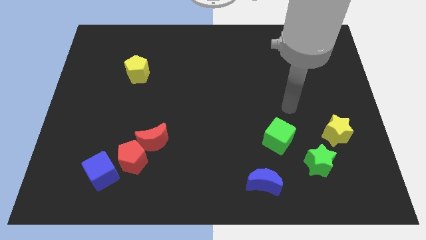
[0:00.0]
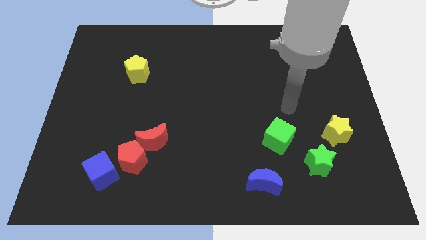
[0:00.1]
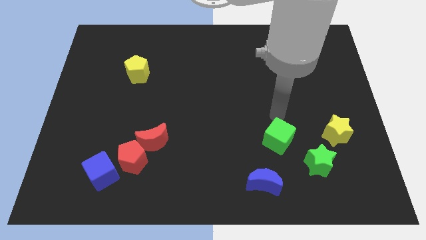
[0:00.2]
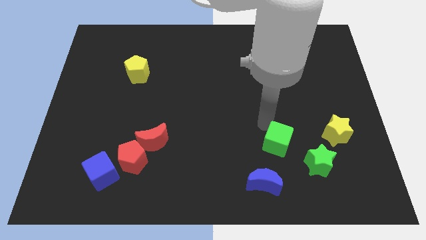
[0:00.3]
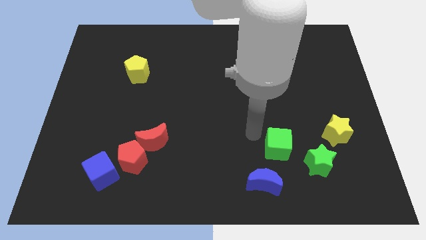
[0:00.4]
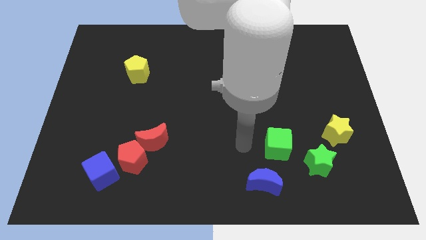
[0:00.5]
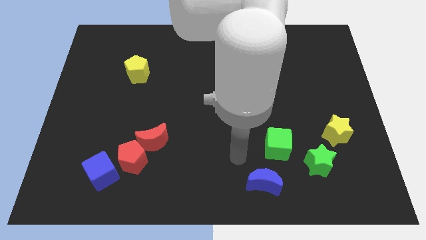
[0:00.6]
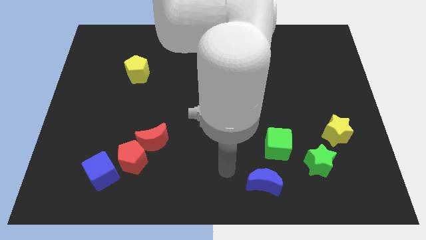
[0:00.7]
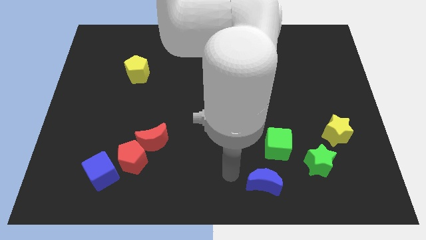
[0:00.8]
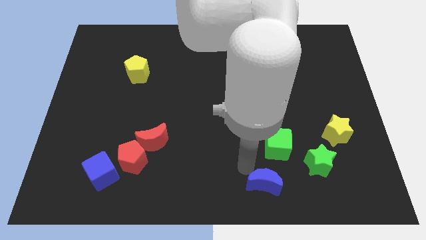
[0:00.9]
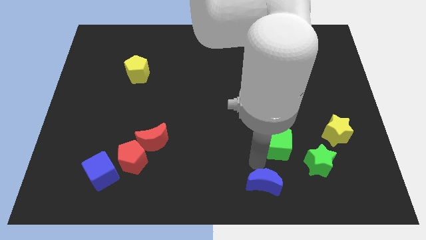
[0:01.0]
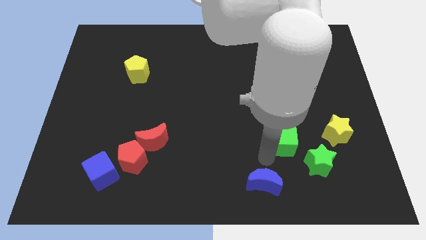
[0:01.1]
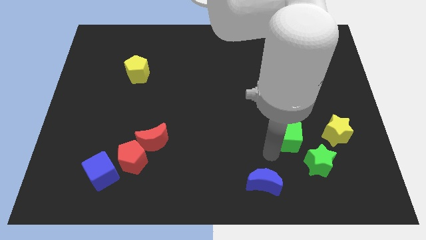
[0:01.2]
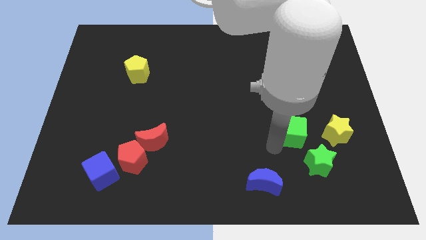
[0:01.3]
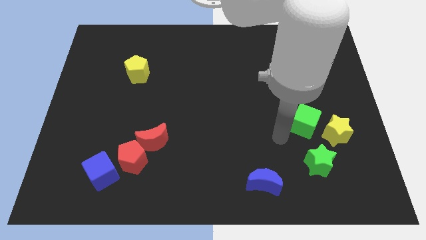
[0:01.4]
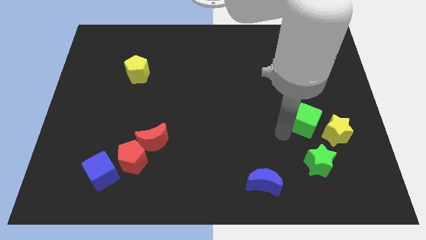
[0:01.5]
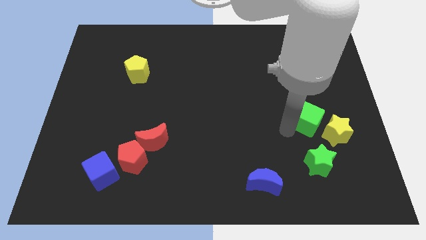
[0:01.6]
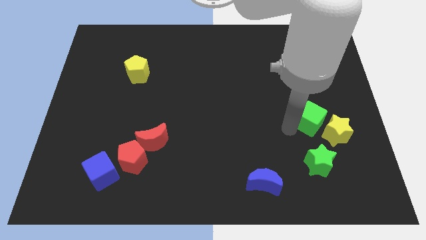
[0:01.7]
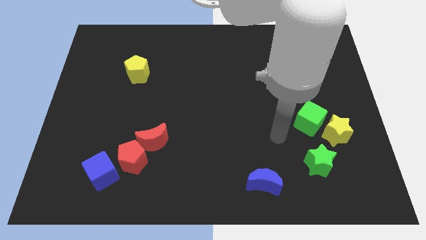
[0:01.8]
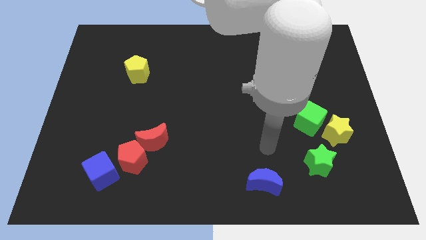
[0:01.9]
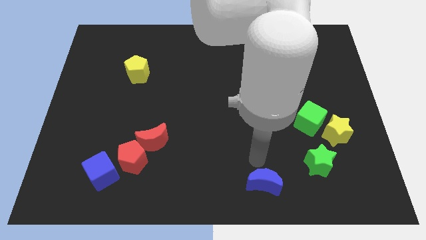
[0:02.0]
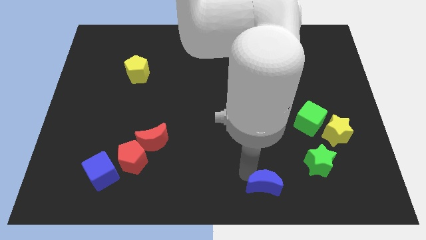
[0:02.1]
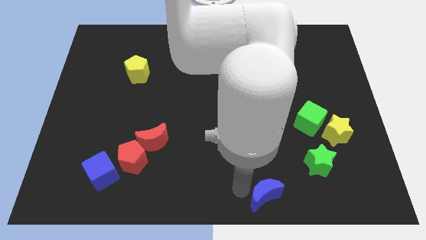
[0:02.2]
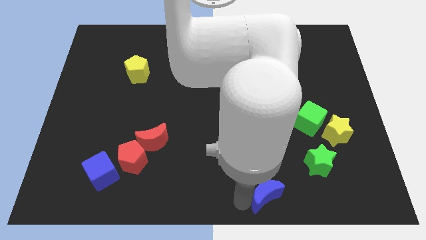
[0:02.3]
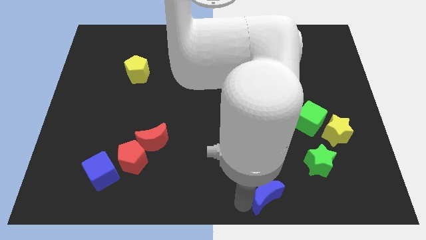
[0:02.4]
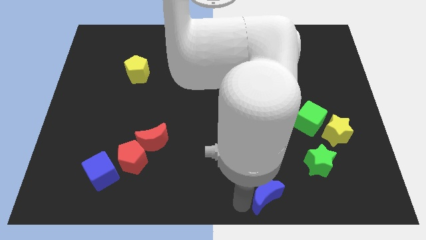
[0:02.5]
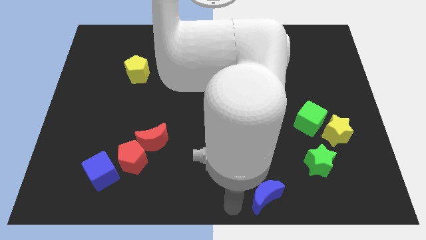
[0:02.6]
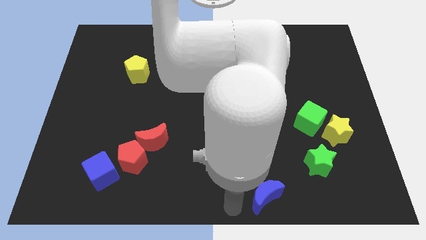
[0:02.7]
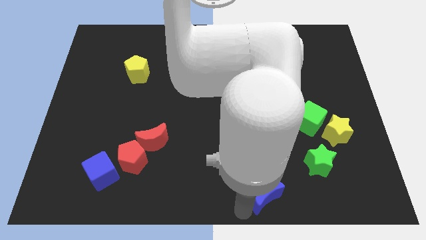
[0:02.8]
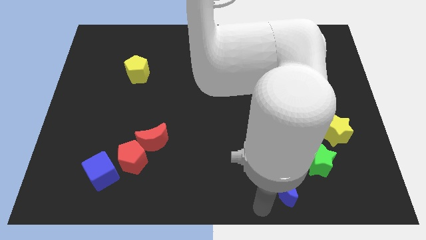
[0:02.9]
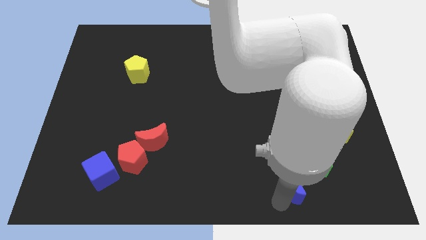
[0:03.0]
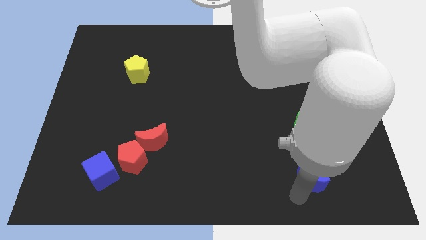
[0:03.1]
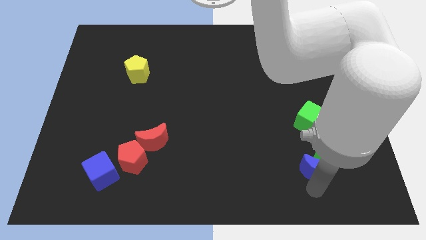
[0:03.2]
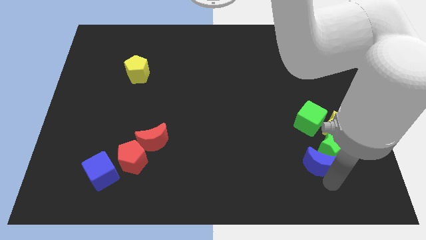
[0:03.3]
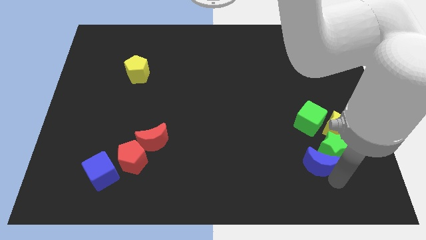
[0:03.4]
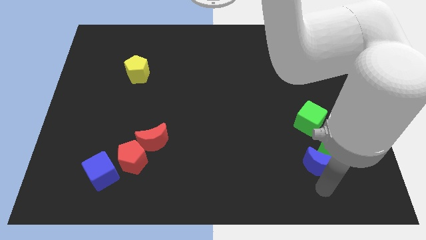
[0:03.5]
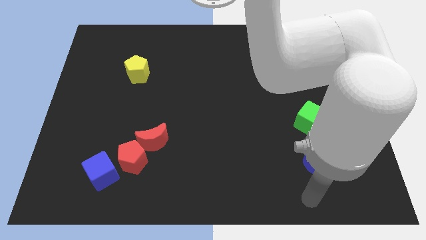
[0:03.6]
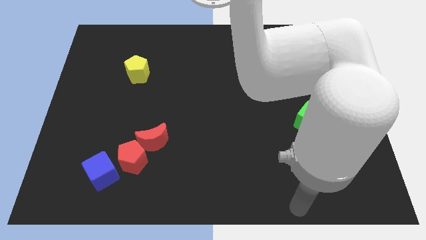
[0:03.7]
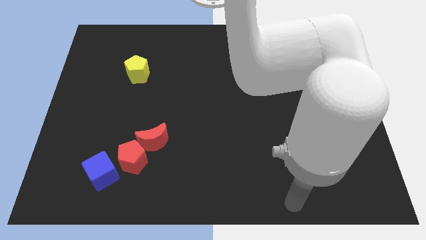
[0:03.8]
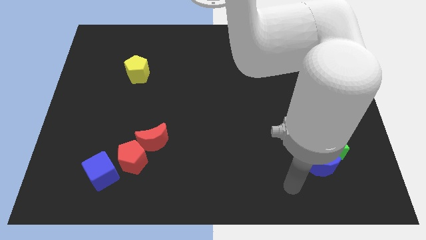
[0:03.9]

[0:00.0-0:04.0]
slightly push the green cube towards the yellow star

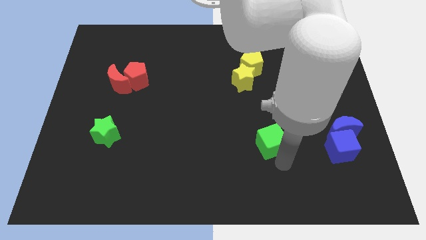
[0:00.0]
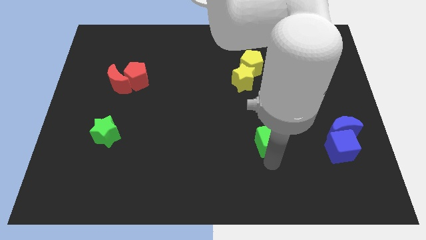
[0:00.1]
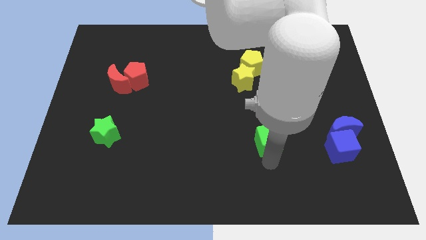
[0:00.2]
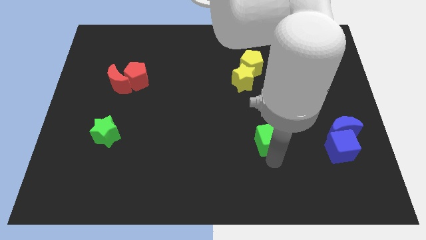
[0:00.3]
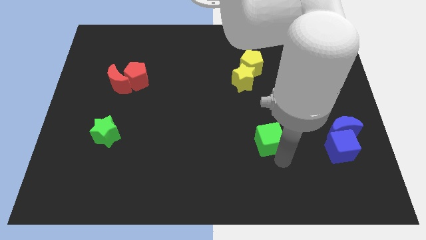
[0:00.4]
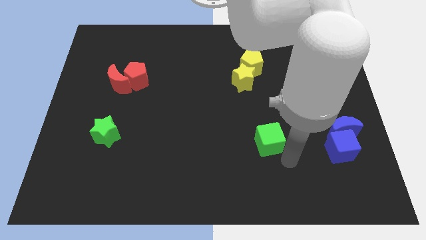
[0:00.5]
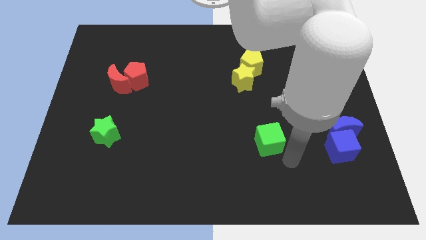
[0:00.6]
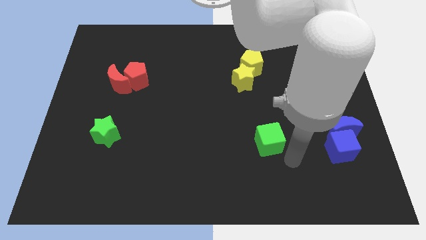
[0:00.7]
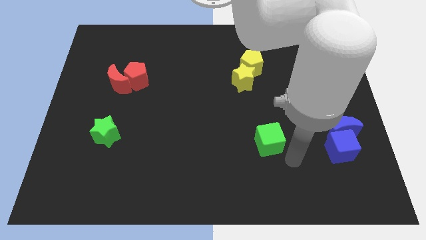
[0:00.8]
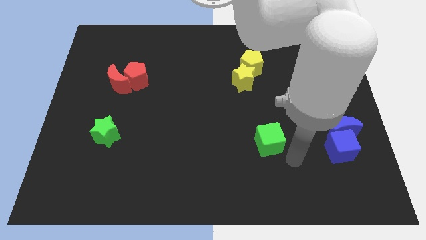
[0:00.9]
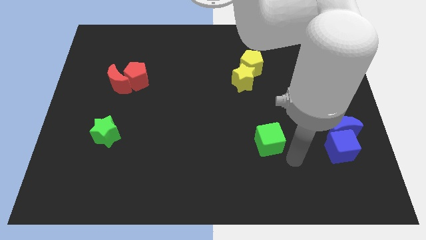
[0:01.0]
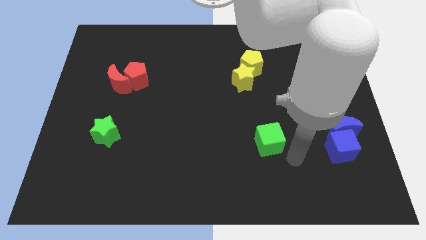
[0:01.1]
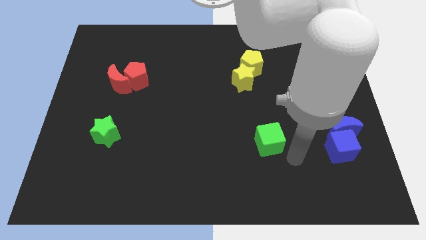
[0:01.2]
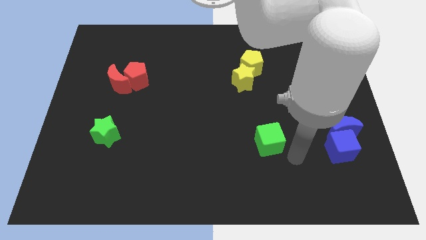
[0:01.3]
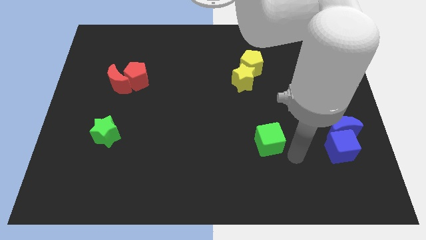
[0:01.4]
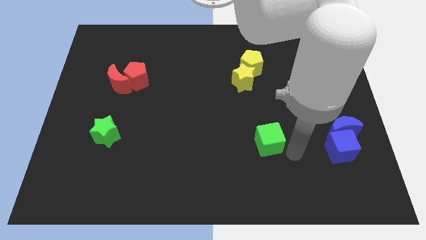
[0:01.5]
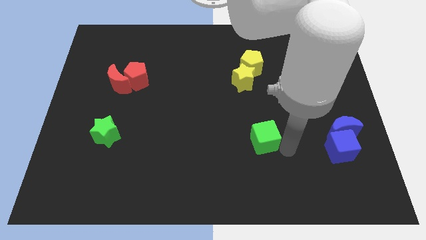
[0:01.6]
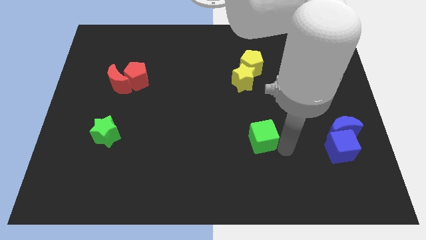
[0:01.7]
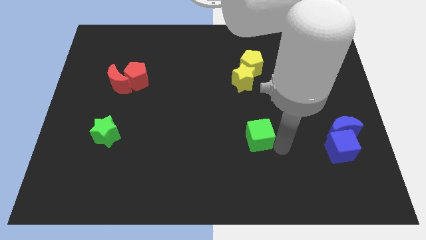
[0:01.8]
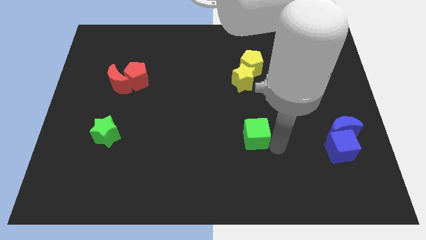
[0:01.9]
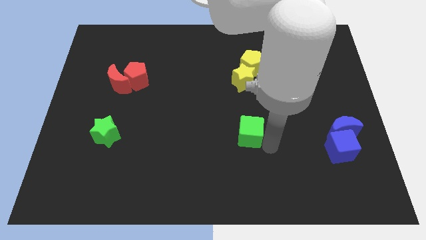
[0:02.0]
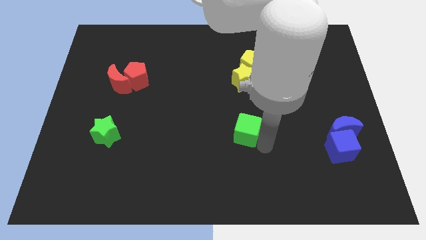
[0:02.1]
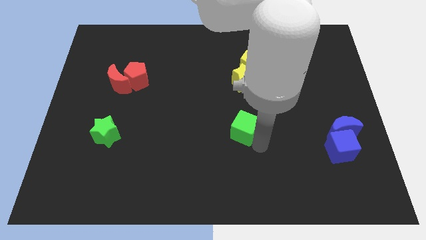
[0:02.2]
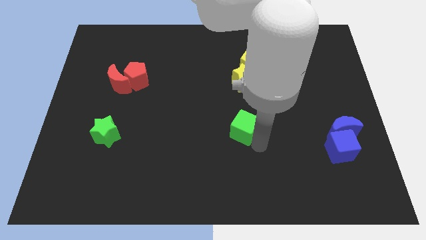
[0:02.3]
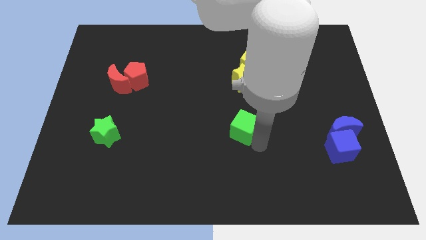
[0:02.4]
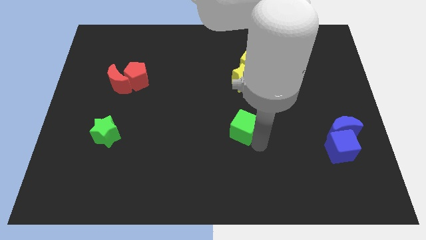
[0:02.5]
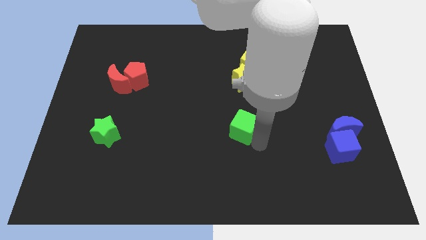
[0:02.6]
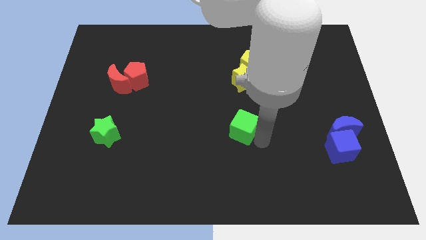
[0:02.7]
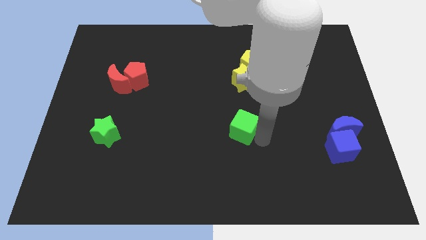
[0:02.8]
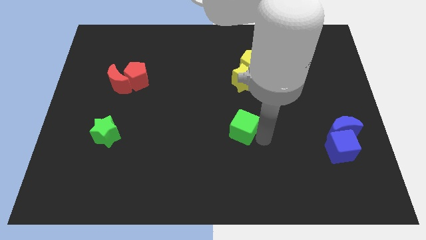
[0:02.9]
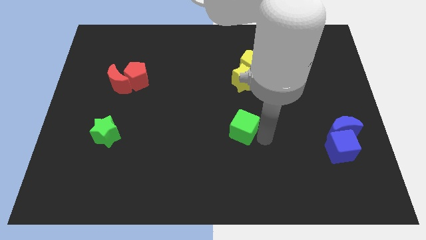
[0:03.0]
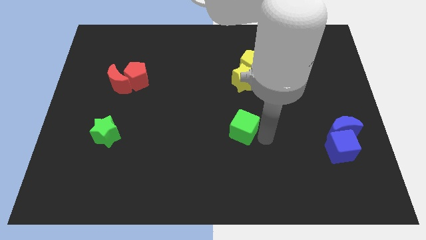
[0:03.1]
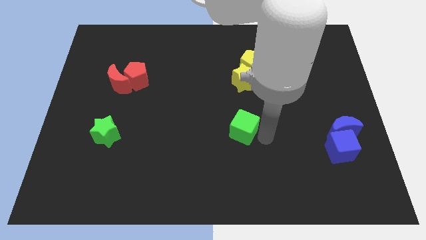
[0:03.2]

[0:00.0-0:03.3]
move the green cube below the yellow star

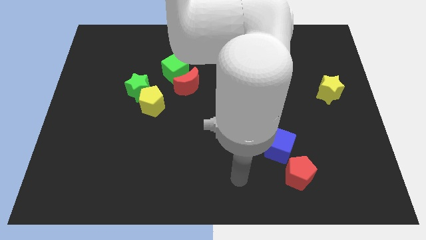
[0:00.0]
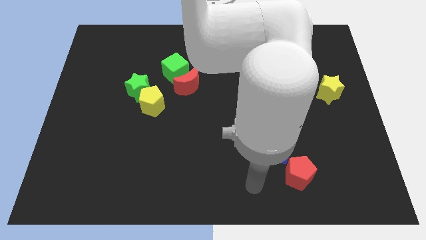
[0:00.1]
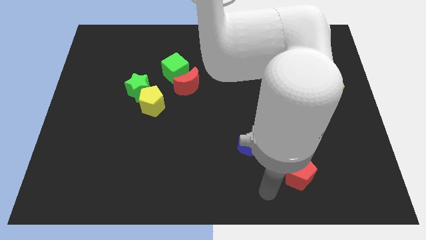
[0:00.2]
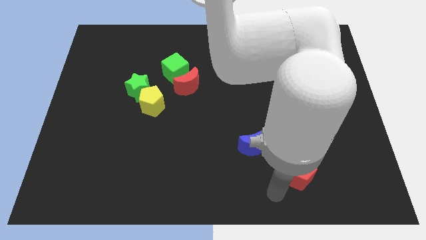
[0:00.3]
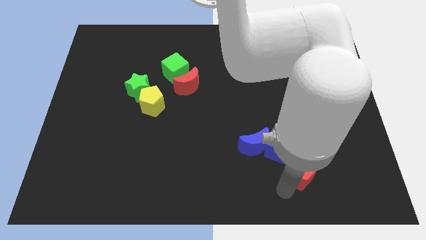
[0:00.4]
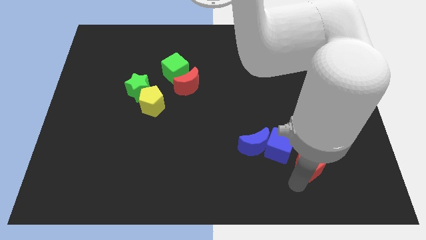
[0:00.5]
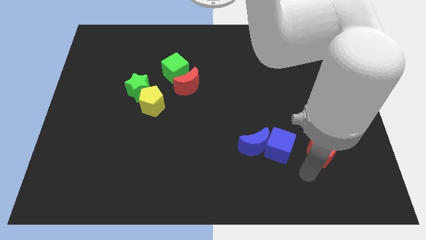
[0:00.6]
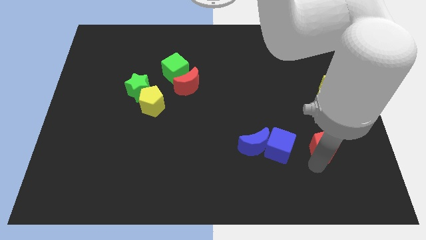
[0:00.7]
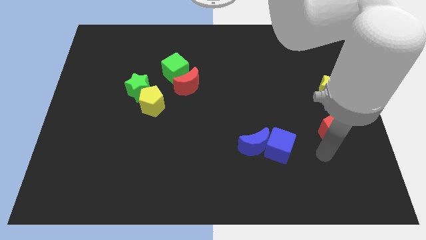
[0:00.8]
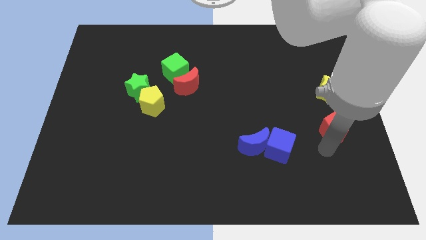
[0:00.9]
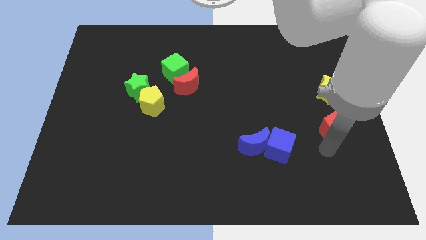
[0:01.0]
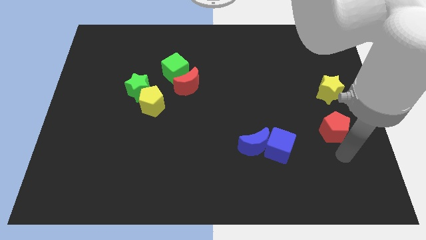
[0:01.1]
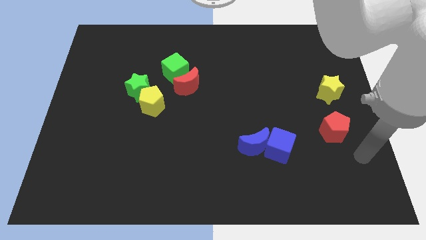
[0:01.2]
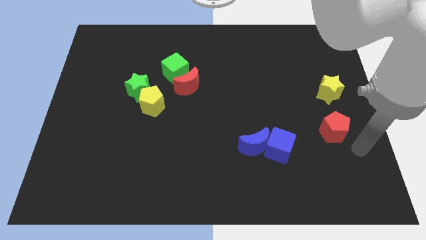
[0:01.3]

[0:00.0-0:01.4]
push red pentagon apart from blue cube

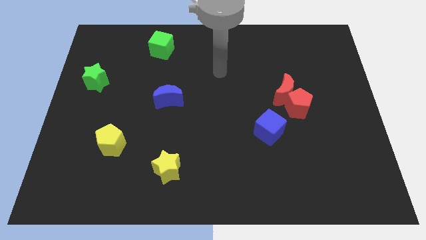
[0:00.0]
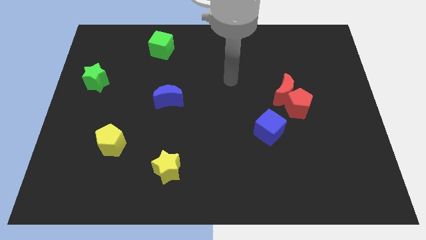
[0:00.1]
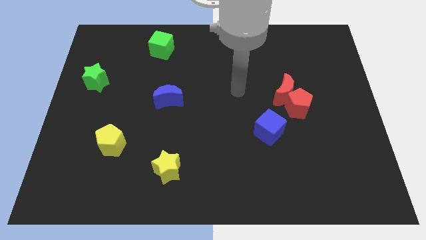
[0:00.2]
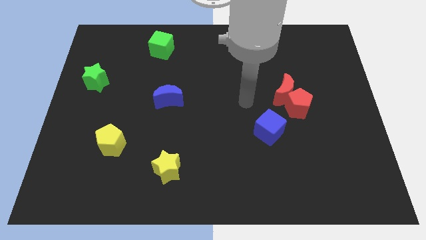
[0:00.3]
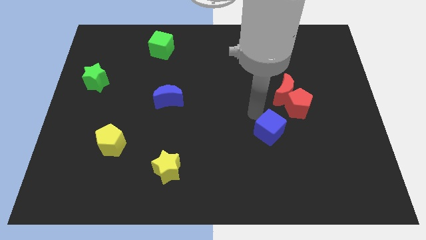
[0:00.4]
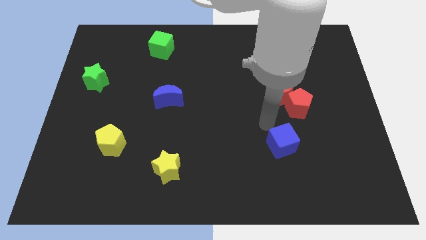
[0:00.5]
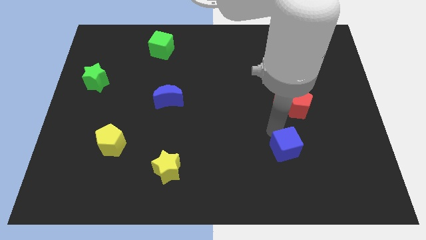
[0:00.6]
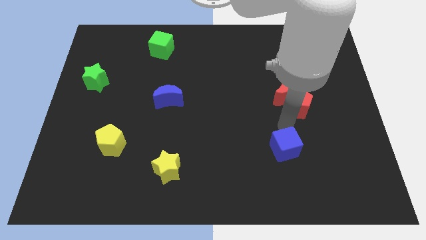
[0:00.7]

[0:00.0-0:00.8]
push the blue cube down slightly
